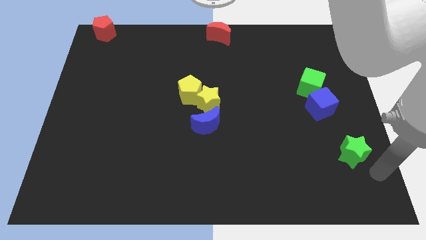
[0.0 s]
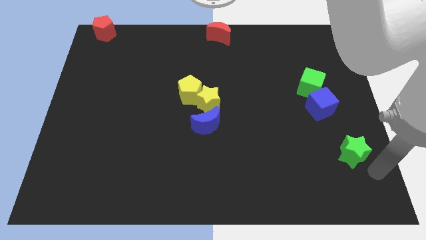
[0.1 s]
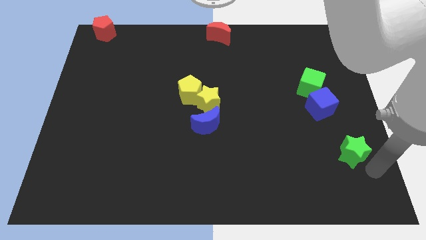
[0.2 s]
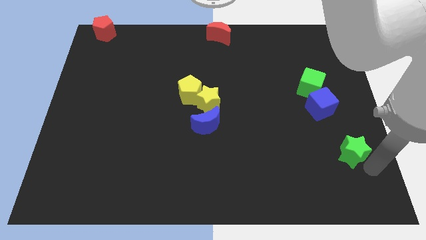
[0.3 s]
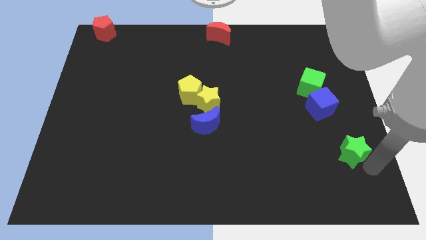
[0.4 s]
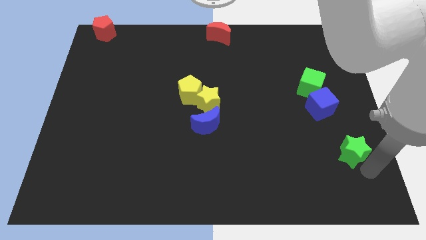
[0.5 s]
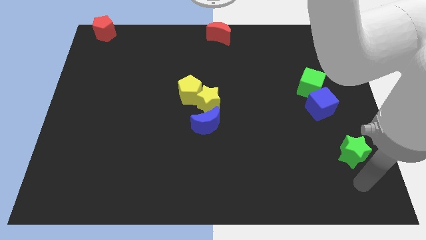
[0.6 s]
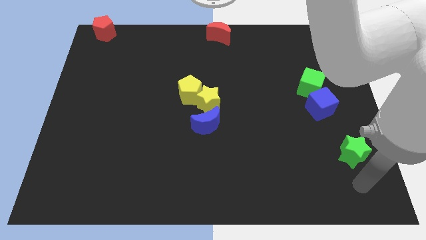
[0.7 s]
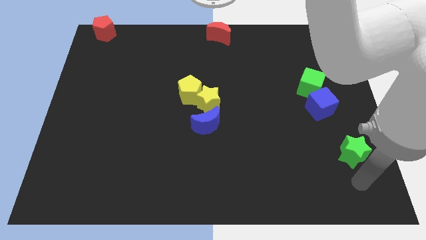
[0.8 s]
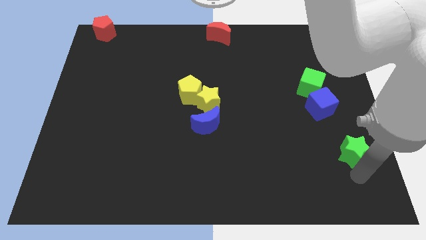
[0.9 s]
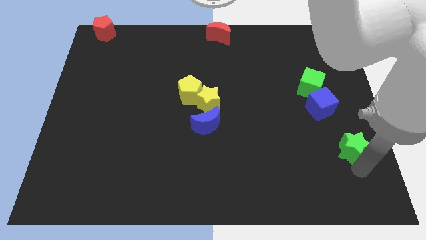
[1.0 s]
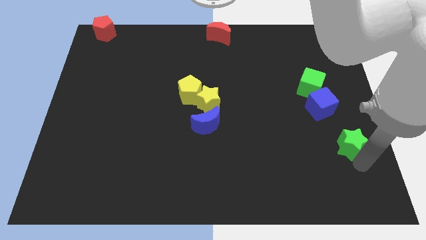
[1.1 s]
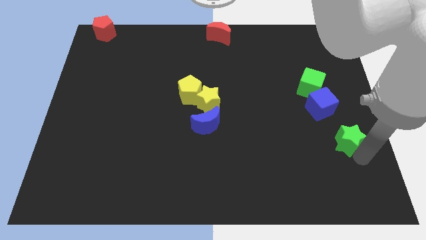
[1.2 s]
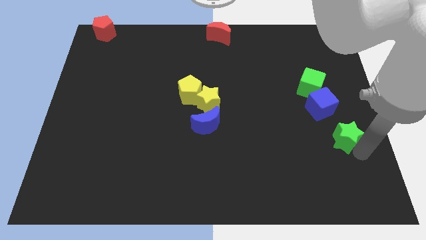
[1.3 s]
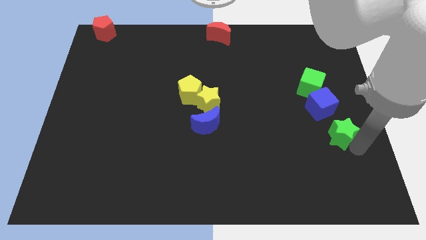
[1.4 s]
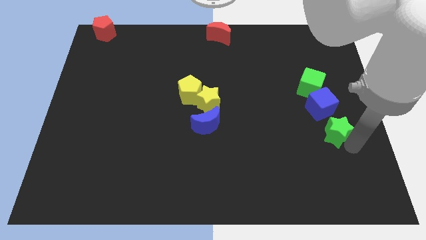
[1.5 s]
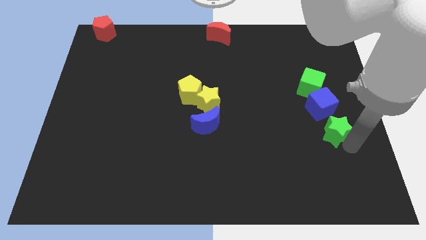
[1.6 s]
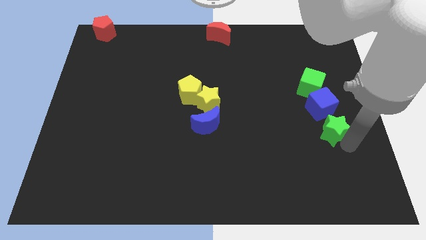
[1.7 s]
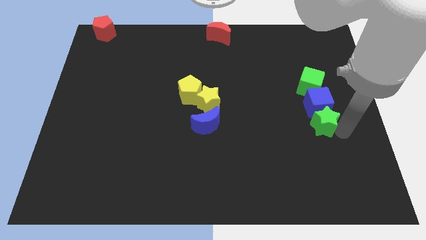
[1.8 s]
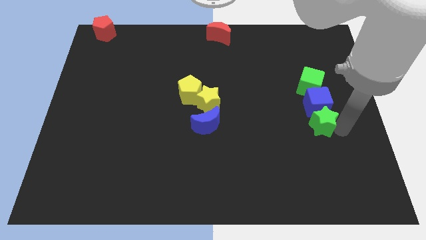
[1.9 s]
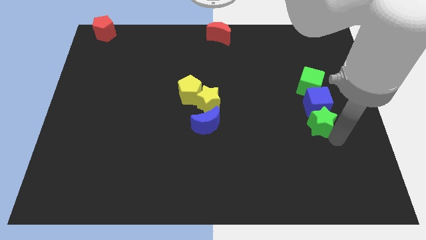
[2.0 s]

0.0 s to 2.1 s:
add green star into blue cube

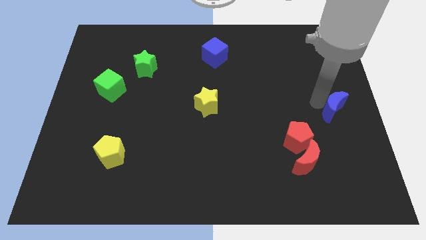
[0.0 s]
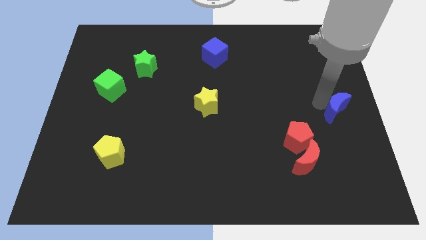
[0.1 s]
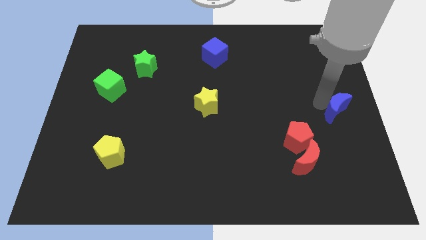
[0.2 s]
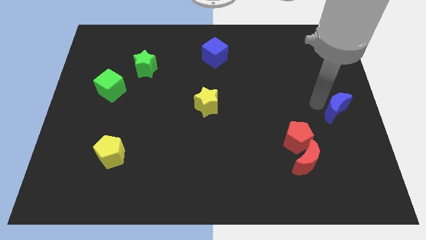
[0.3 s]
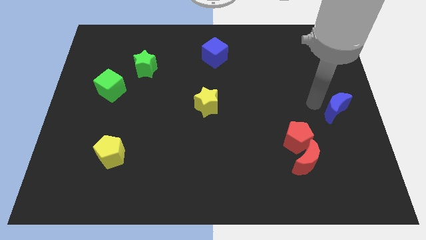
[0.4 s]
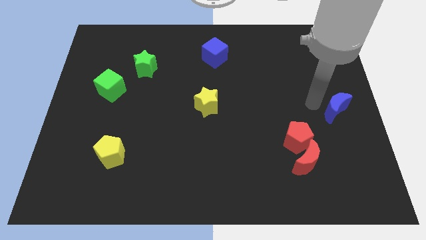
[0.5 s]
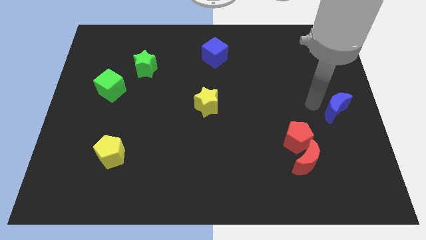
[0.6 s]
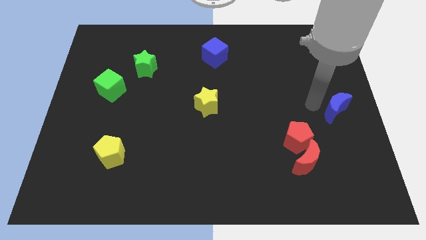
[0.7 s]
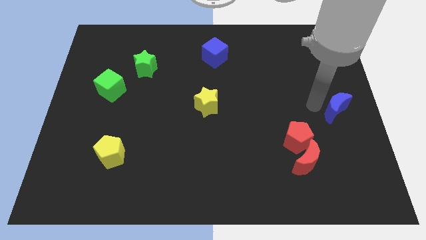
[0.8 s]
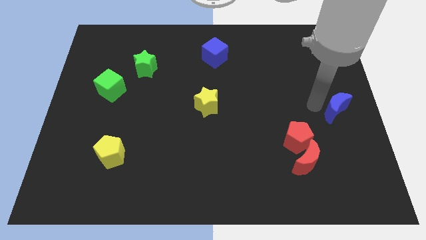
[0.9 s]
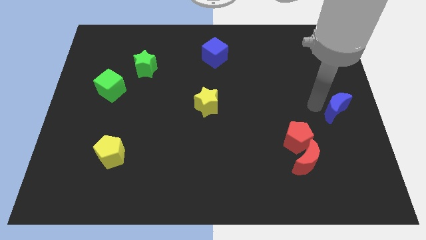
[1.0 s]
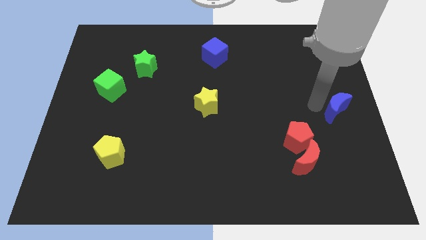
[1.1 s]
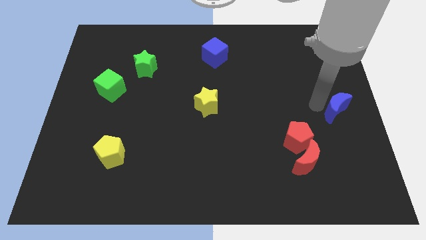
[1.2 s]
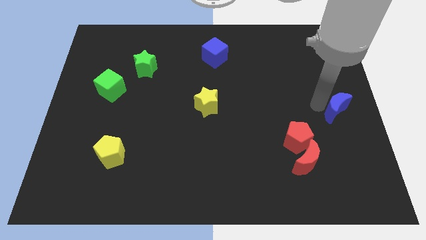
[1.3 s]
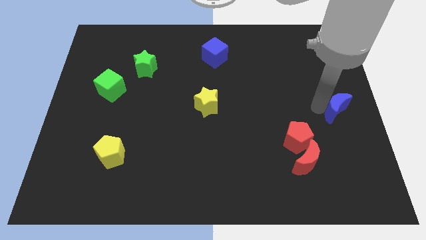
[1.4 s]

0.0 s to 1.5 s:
push the blue crescent towards the center right

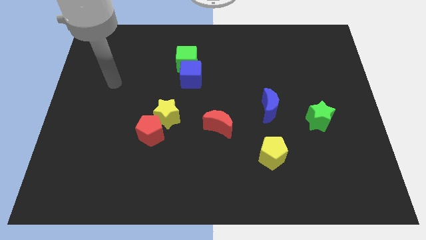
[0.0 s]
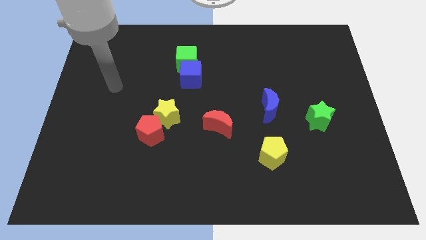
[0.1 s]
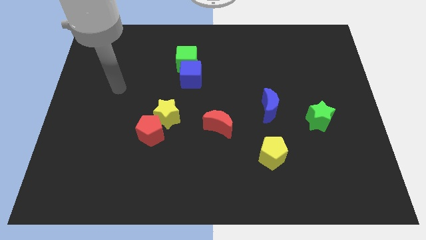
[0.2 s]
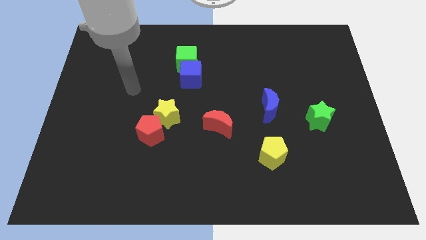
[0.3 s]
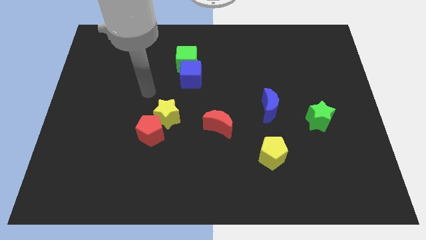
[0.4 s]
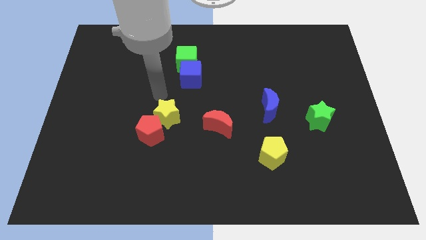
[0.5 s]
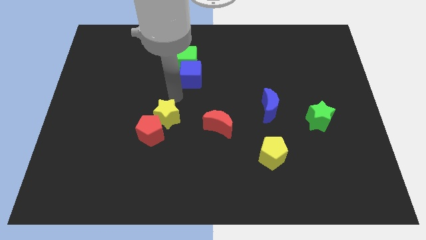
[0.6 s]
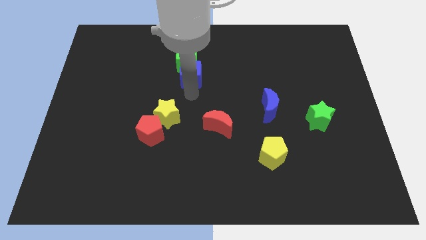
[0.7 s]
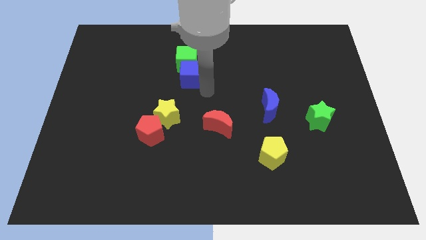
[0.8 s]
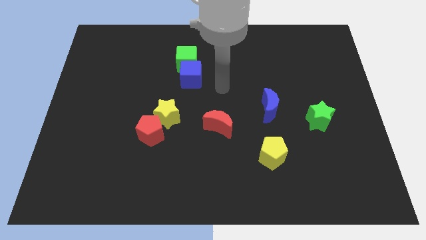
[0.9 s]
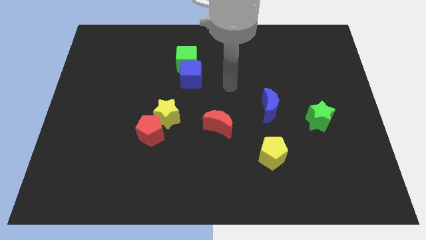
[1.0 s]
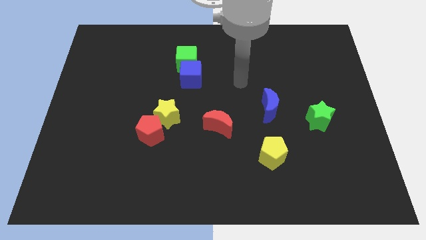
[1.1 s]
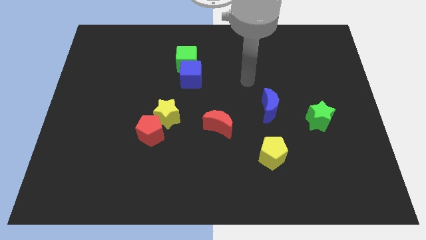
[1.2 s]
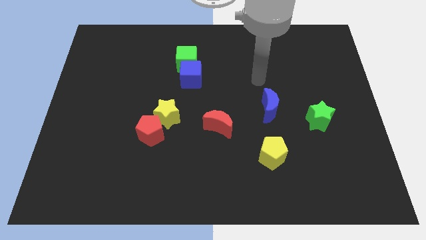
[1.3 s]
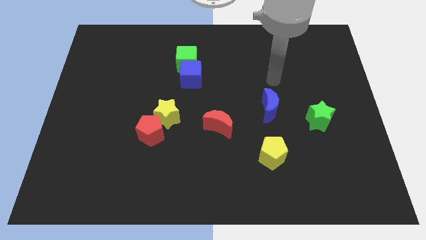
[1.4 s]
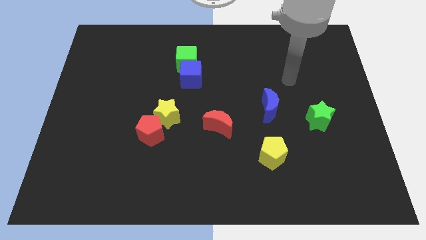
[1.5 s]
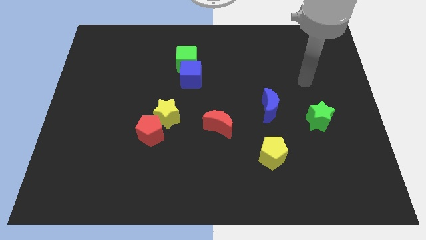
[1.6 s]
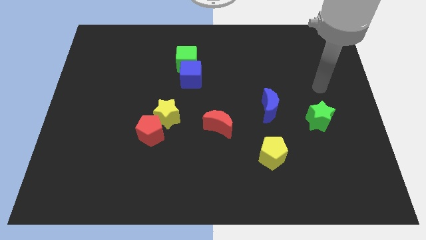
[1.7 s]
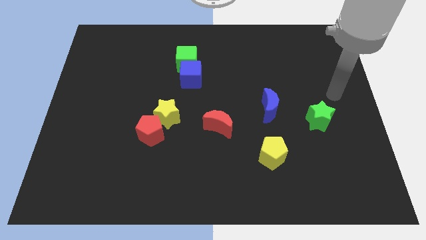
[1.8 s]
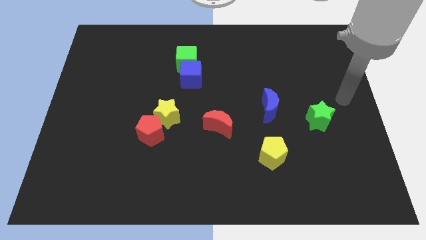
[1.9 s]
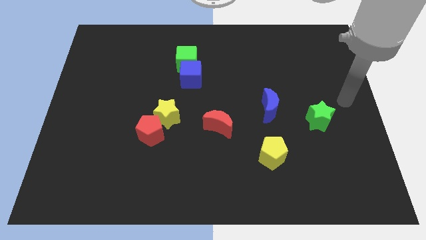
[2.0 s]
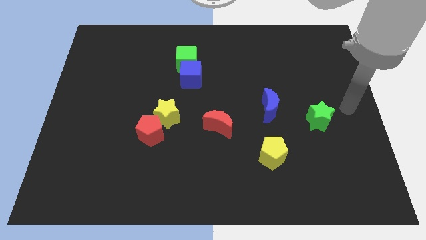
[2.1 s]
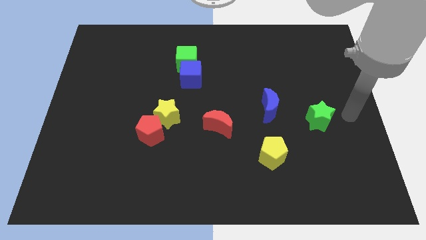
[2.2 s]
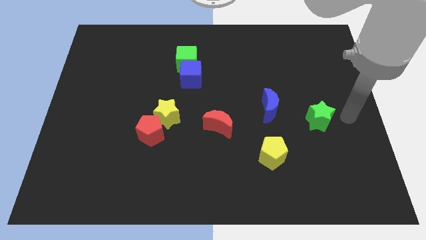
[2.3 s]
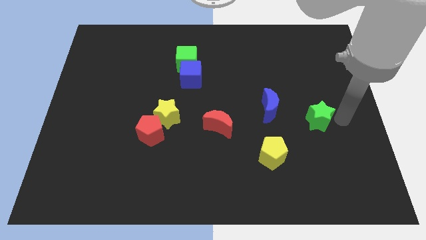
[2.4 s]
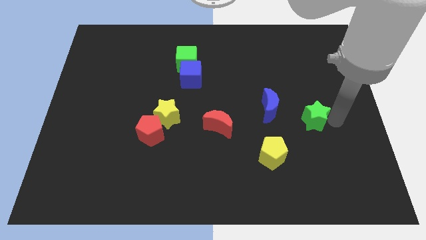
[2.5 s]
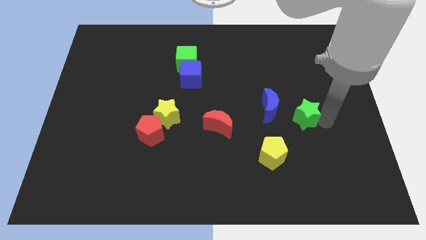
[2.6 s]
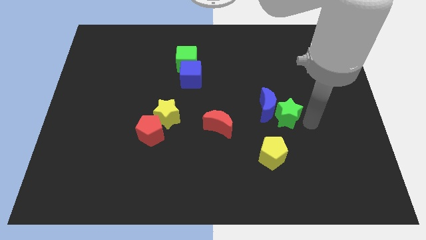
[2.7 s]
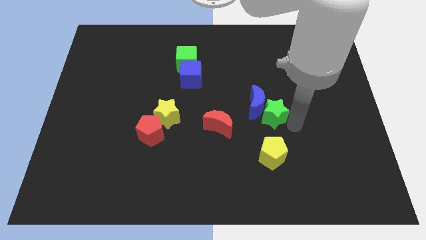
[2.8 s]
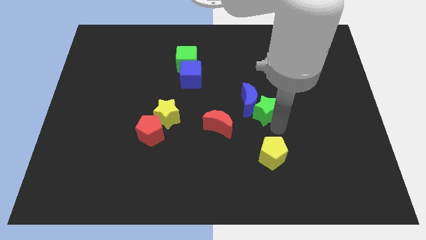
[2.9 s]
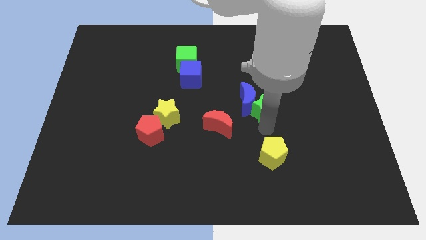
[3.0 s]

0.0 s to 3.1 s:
push the green star into the blue moon

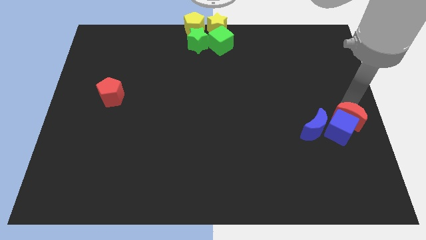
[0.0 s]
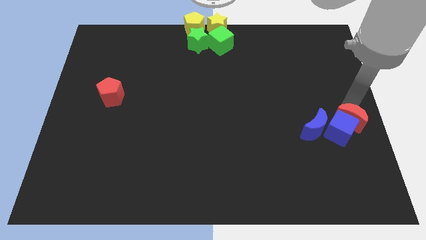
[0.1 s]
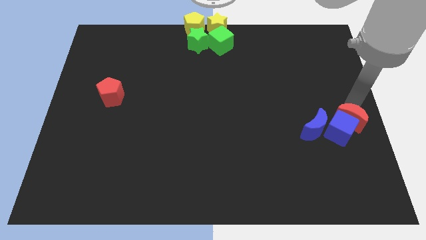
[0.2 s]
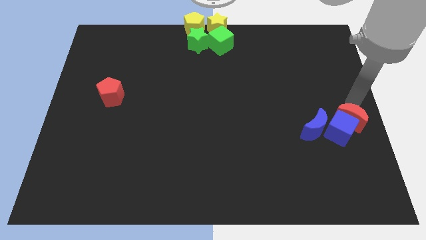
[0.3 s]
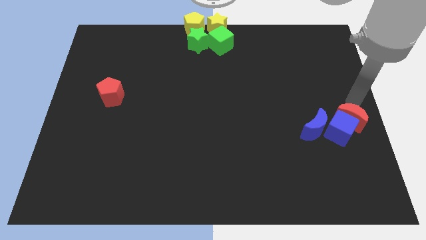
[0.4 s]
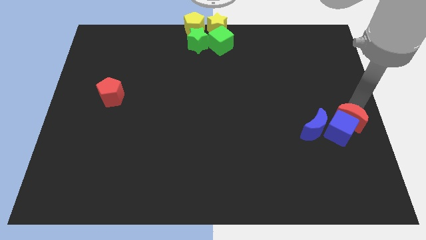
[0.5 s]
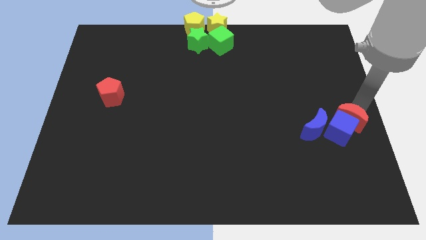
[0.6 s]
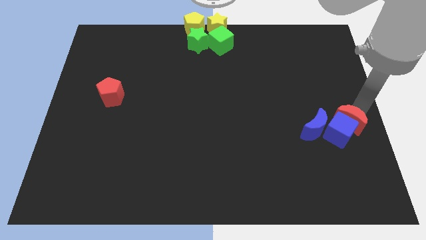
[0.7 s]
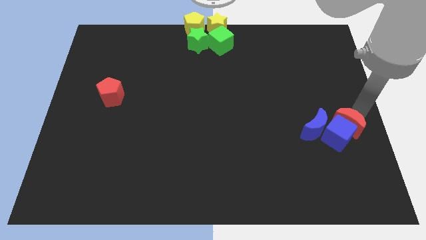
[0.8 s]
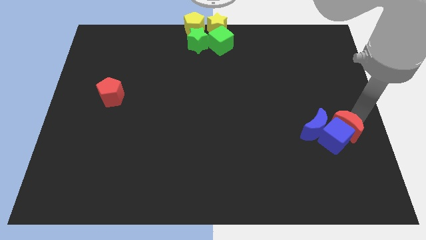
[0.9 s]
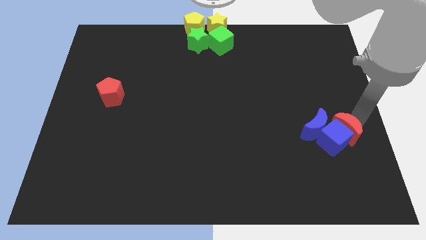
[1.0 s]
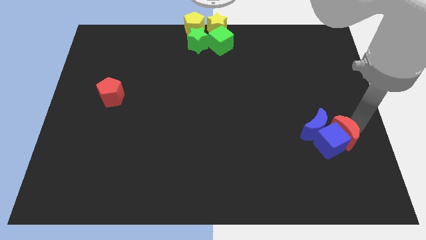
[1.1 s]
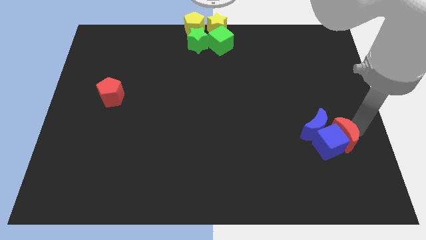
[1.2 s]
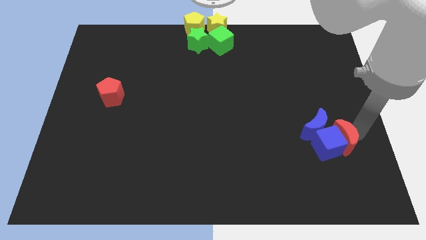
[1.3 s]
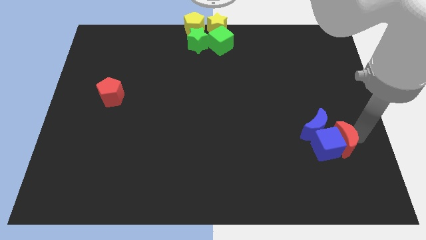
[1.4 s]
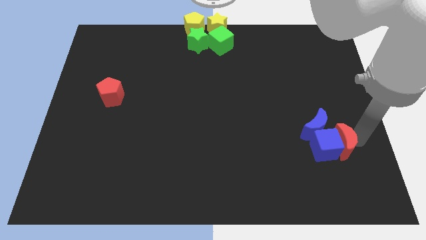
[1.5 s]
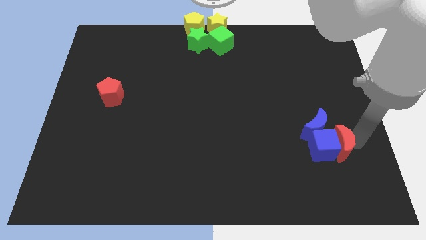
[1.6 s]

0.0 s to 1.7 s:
place the blue cube to the bottom of the blue crescent

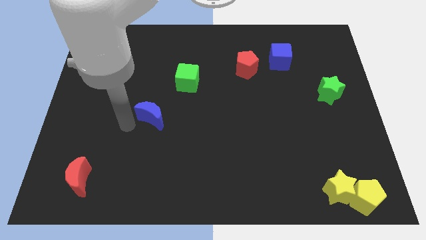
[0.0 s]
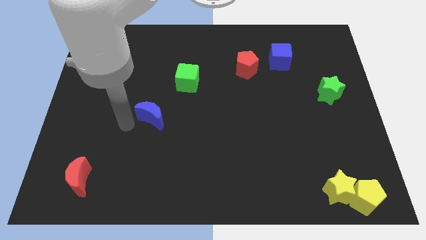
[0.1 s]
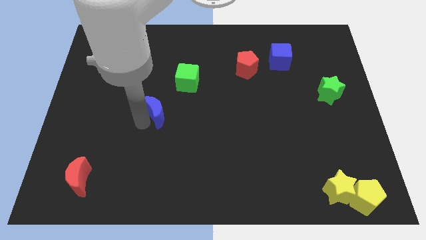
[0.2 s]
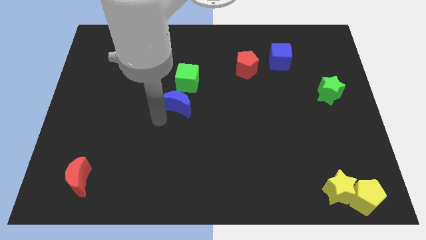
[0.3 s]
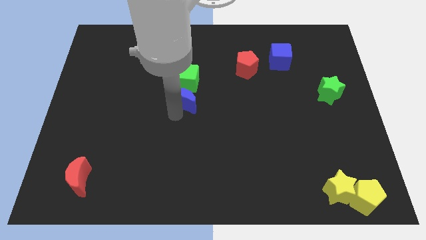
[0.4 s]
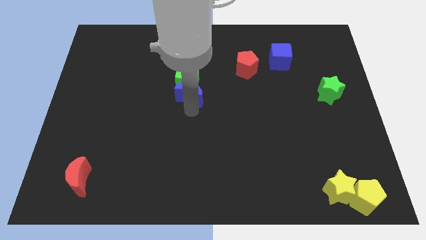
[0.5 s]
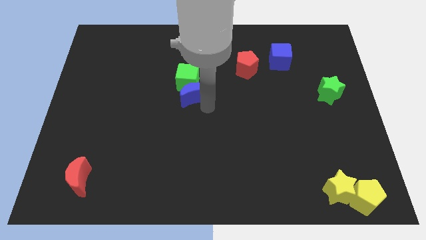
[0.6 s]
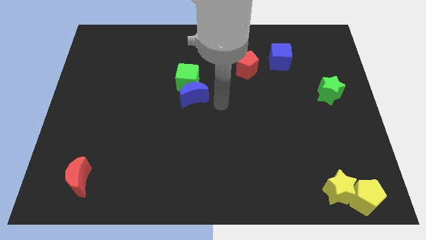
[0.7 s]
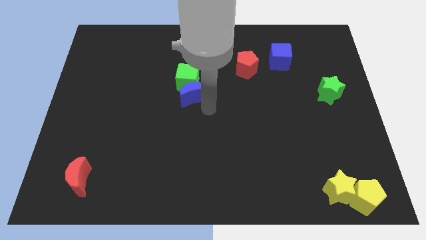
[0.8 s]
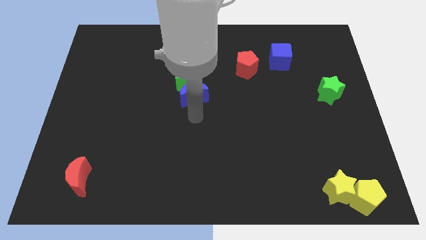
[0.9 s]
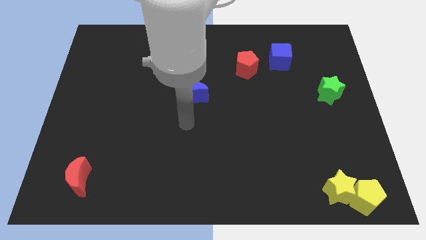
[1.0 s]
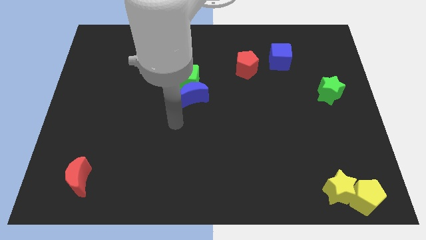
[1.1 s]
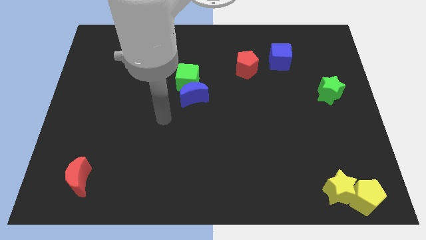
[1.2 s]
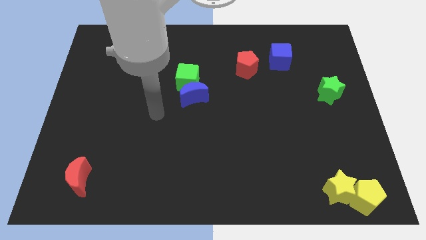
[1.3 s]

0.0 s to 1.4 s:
place the blue moon below the green cube
